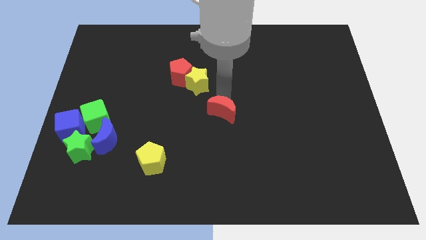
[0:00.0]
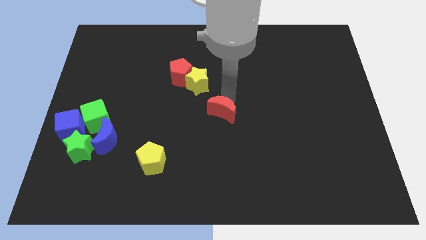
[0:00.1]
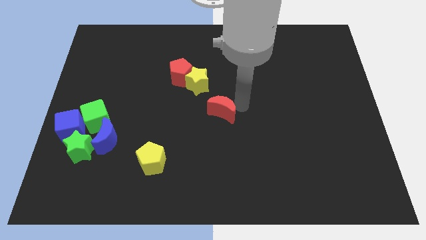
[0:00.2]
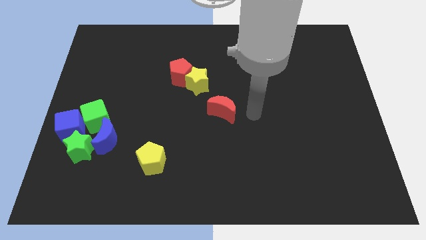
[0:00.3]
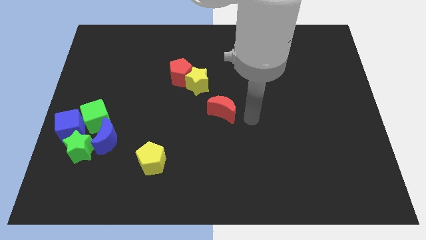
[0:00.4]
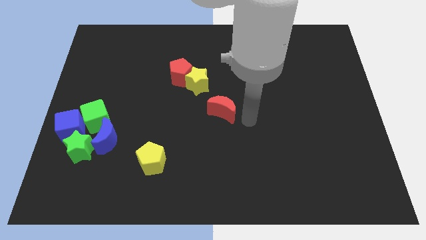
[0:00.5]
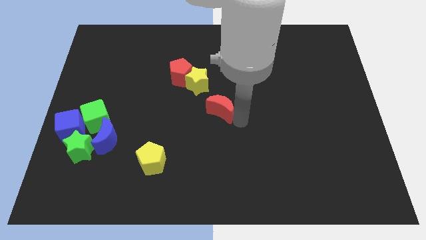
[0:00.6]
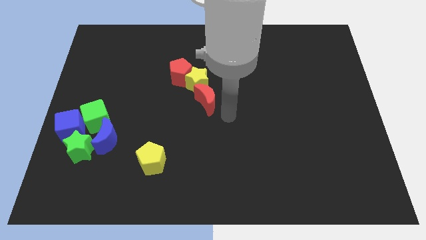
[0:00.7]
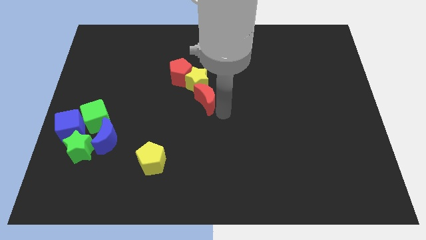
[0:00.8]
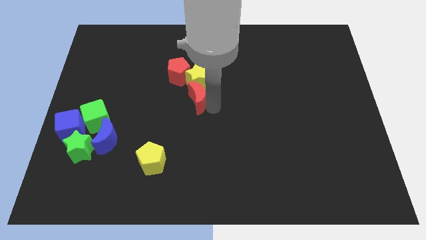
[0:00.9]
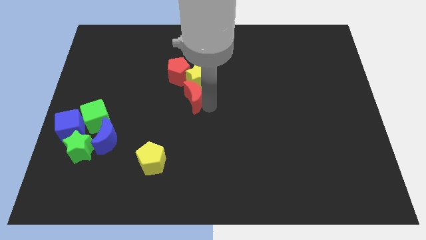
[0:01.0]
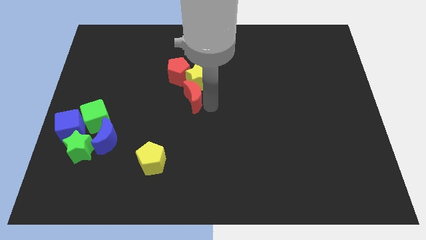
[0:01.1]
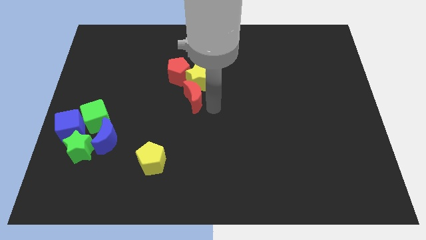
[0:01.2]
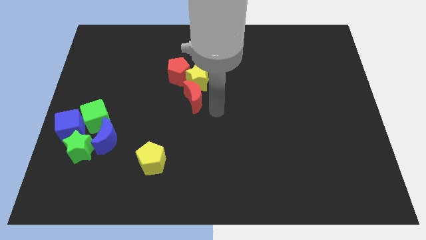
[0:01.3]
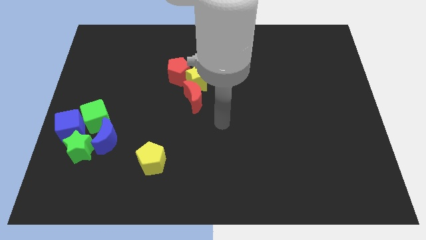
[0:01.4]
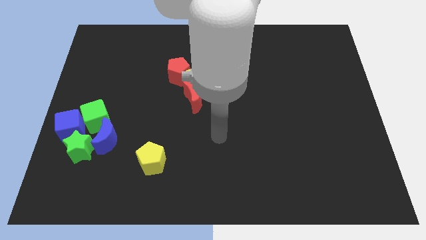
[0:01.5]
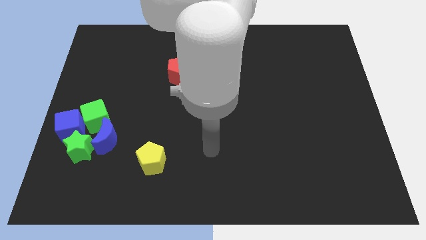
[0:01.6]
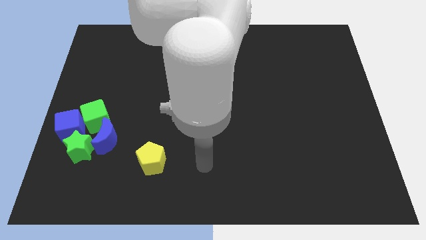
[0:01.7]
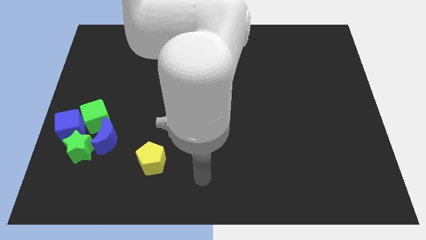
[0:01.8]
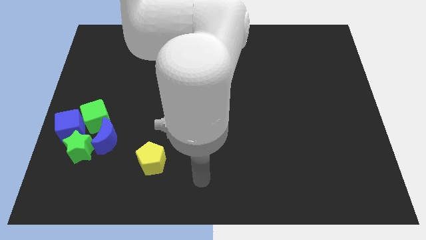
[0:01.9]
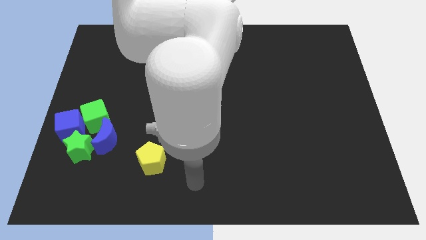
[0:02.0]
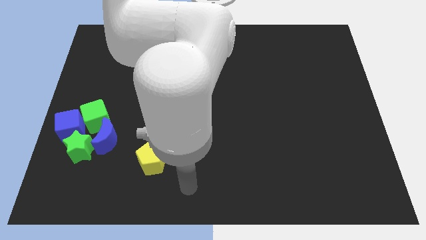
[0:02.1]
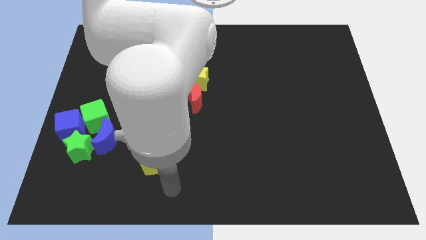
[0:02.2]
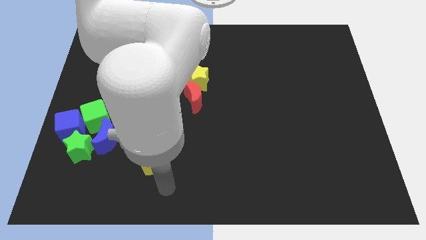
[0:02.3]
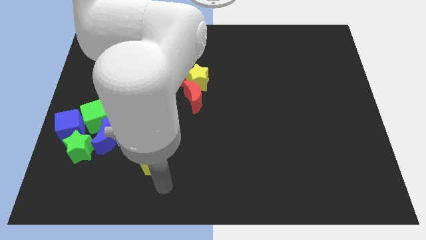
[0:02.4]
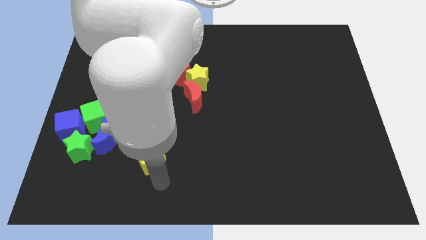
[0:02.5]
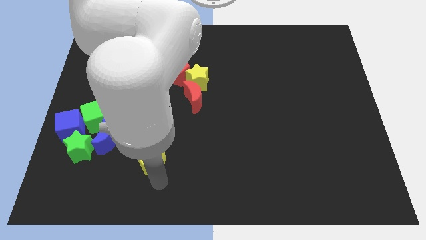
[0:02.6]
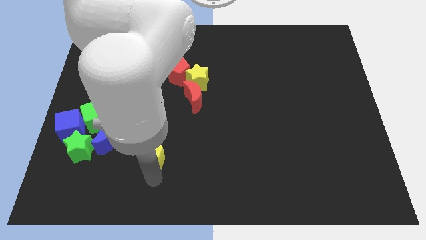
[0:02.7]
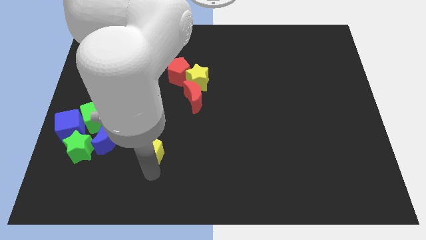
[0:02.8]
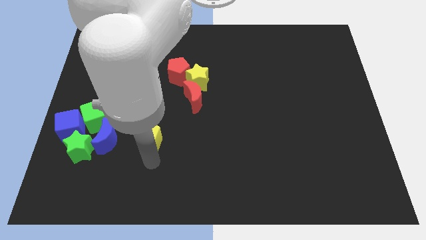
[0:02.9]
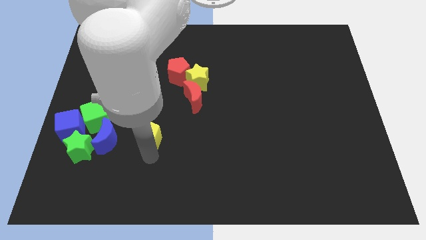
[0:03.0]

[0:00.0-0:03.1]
slide the yellow pentagon diagonal to the yellow star

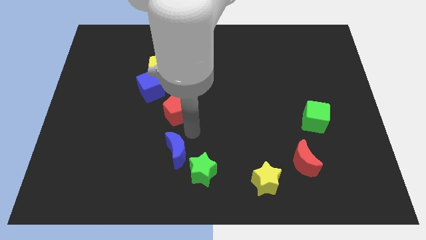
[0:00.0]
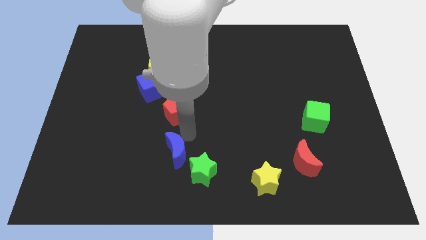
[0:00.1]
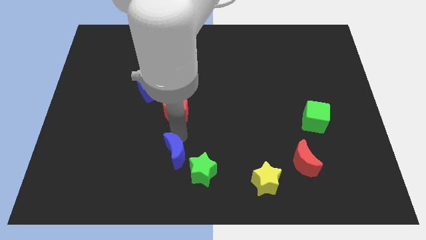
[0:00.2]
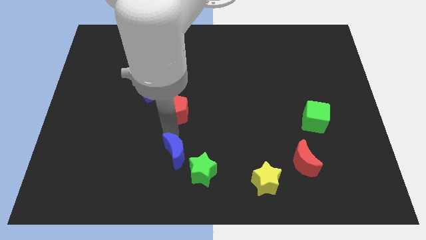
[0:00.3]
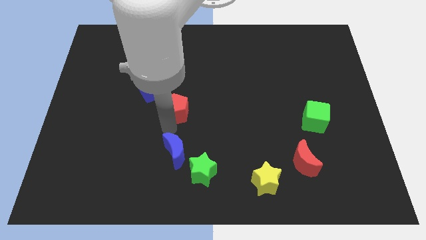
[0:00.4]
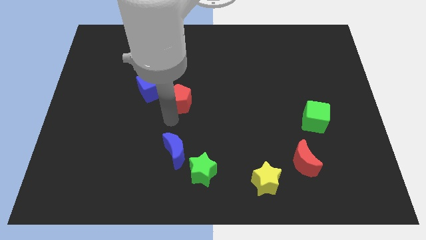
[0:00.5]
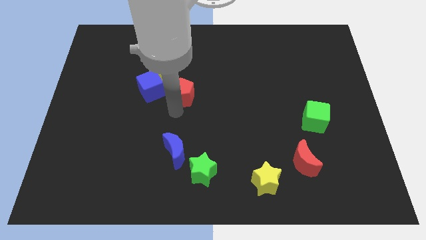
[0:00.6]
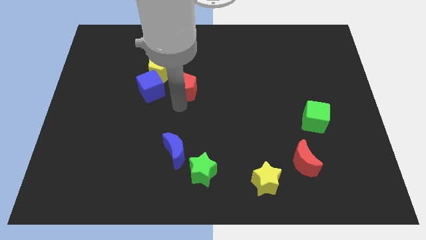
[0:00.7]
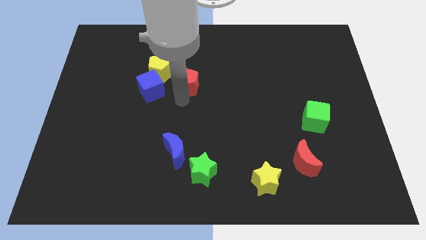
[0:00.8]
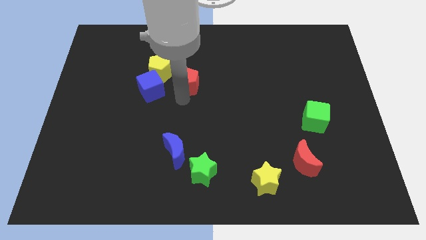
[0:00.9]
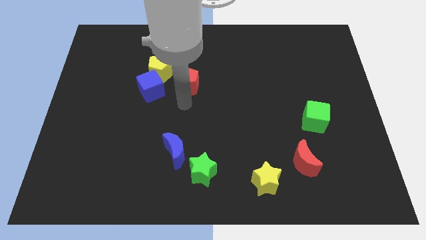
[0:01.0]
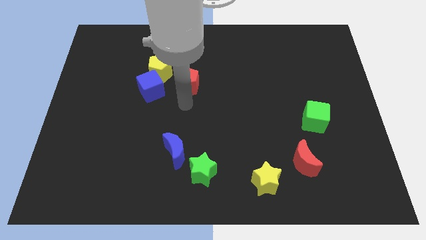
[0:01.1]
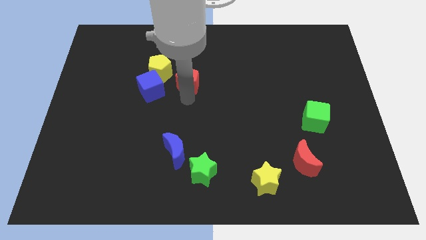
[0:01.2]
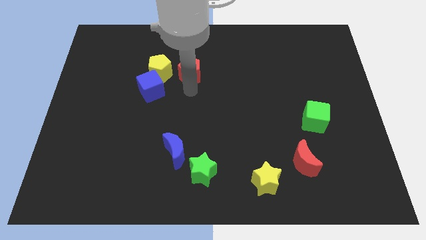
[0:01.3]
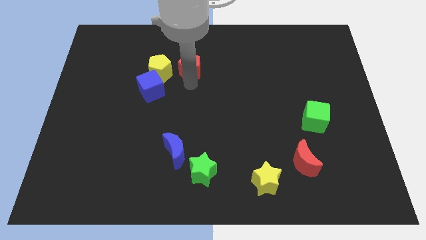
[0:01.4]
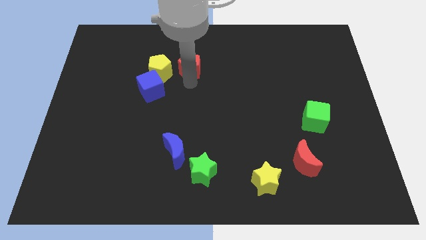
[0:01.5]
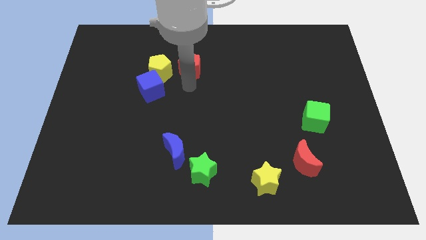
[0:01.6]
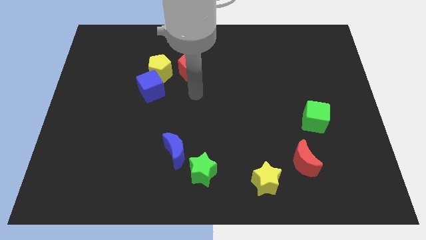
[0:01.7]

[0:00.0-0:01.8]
push the red pentagon horizontal parallel to the yellow pentagon

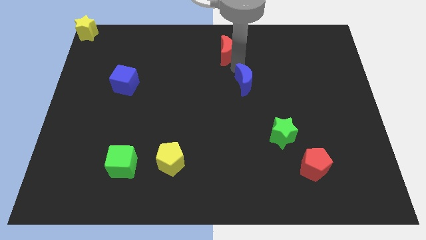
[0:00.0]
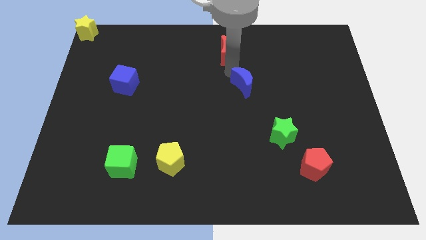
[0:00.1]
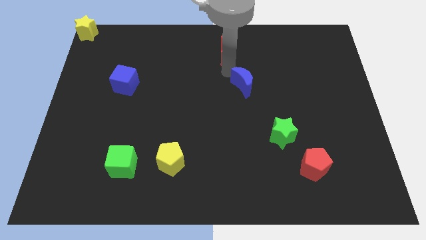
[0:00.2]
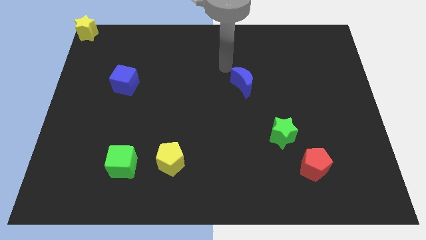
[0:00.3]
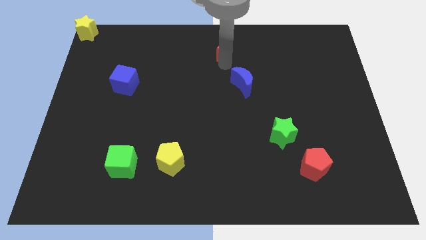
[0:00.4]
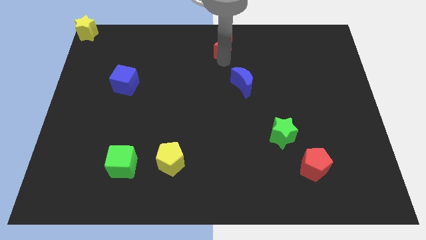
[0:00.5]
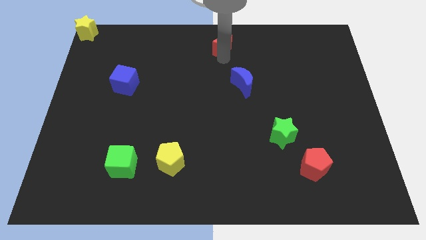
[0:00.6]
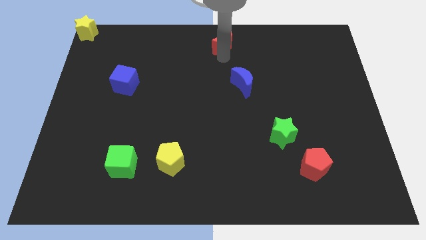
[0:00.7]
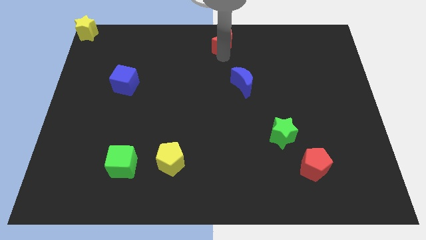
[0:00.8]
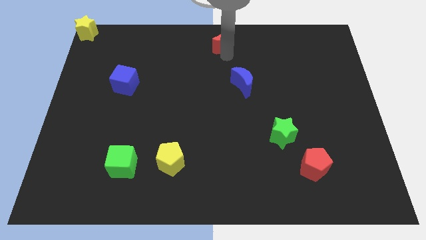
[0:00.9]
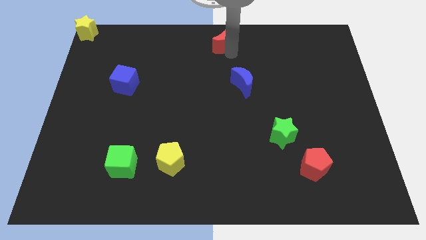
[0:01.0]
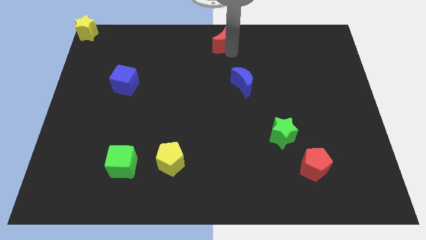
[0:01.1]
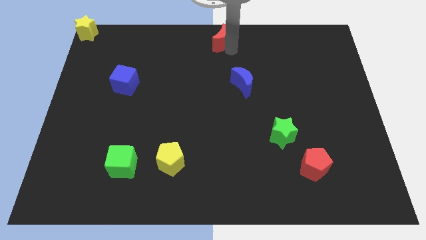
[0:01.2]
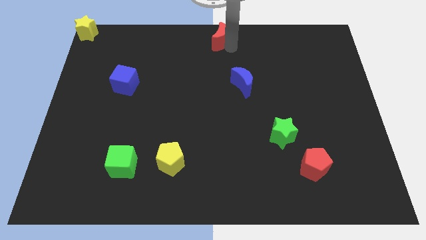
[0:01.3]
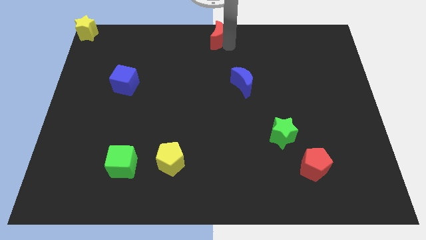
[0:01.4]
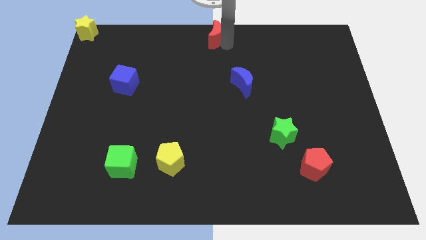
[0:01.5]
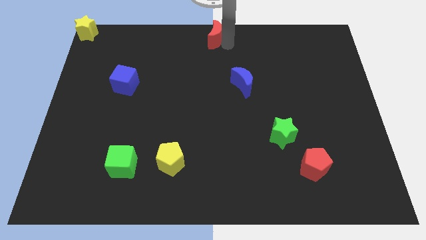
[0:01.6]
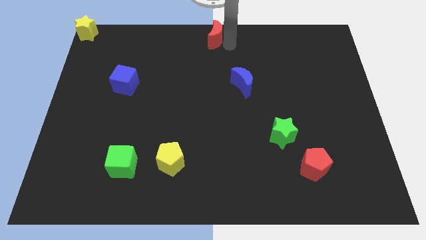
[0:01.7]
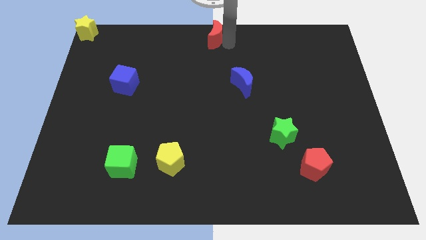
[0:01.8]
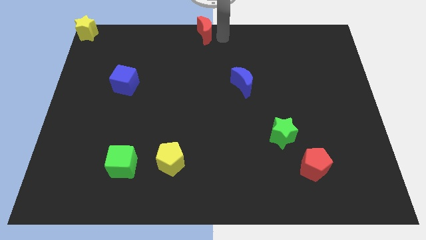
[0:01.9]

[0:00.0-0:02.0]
move the red crescent to the top center

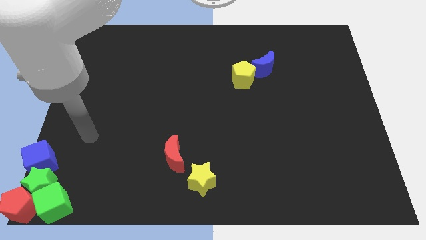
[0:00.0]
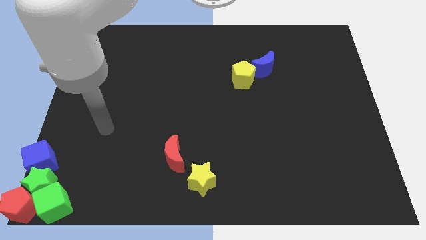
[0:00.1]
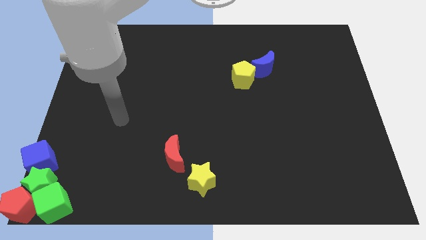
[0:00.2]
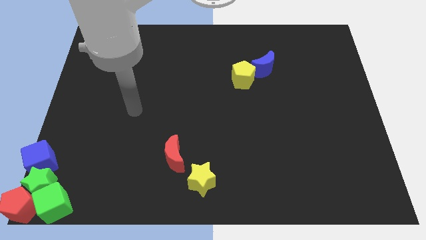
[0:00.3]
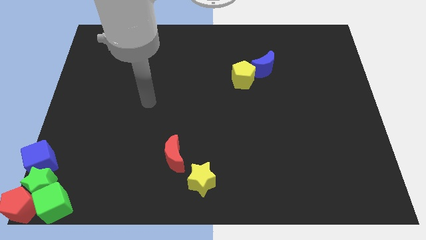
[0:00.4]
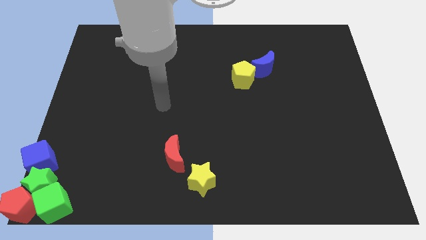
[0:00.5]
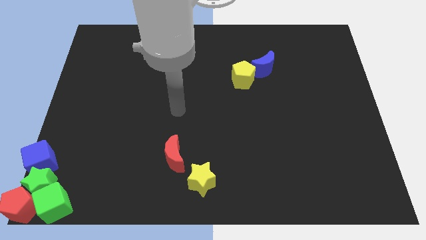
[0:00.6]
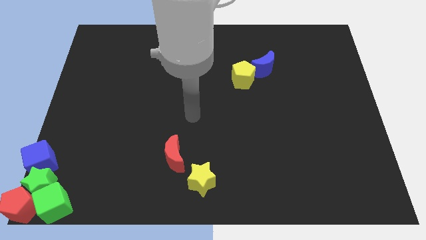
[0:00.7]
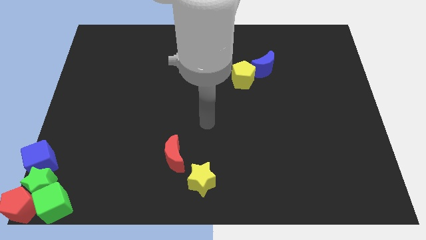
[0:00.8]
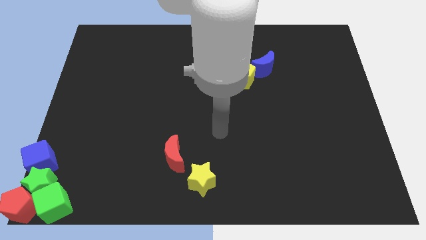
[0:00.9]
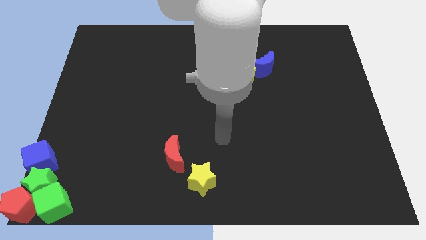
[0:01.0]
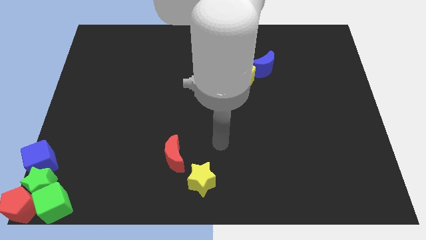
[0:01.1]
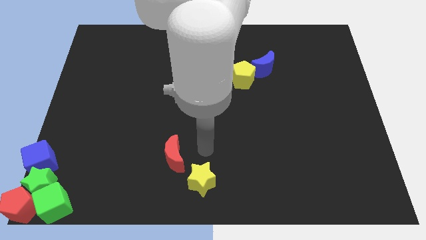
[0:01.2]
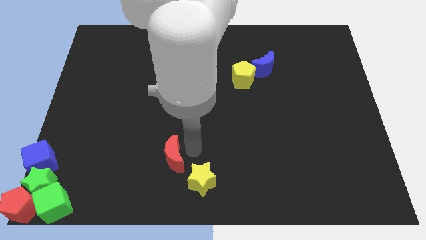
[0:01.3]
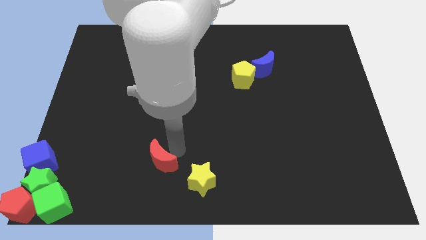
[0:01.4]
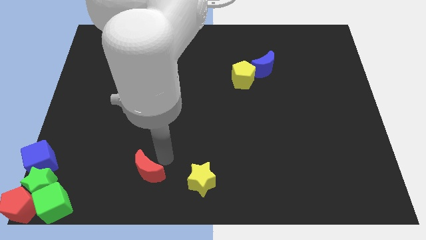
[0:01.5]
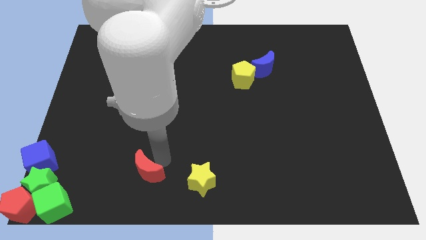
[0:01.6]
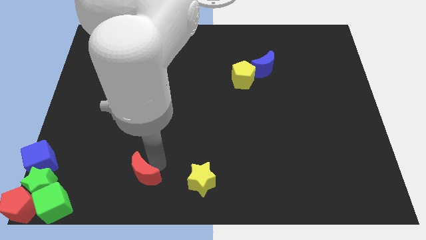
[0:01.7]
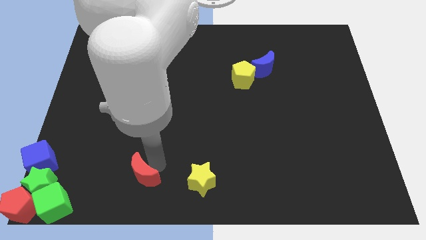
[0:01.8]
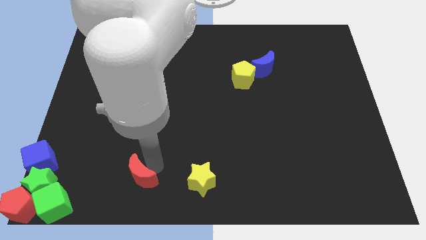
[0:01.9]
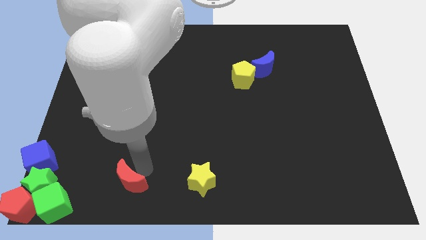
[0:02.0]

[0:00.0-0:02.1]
move the red crescent to the left of the yellow star

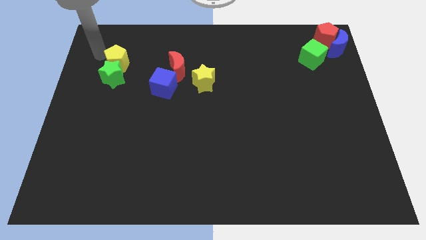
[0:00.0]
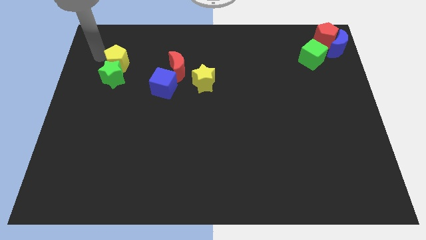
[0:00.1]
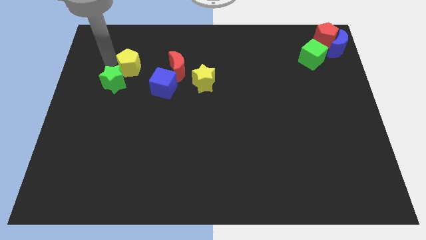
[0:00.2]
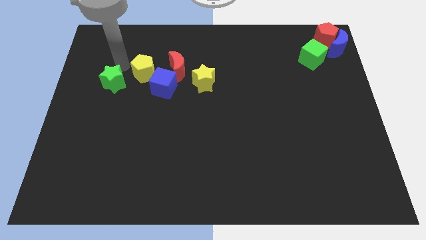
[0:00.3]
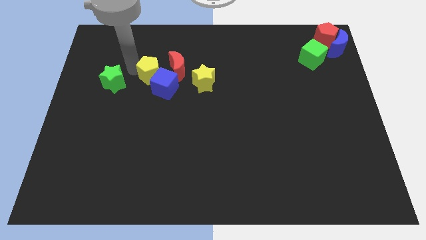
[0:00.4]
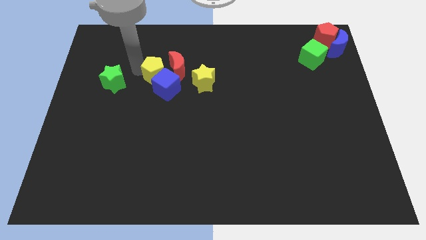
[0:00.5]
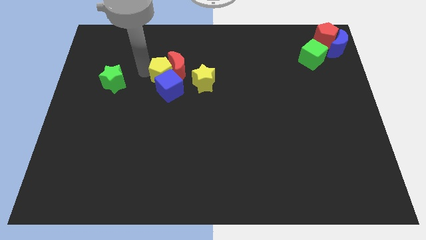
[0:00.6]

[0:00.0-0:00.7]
move the yellow pentagon into the blue cube
